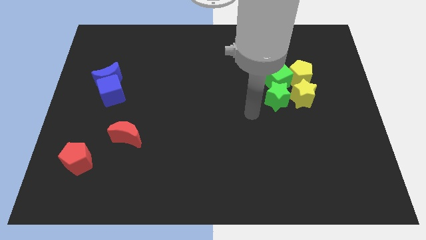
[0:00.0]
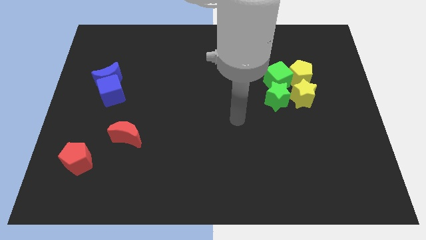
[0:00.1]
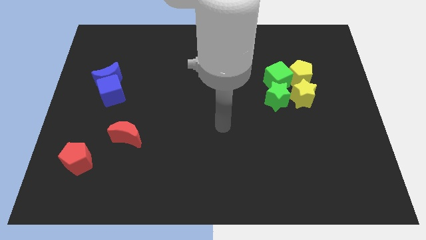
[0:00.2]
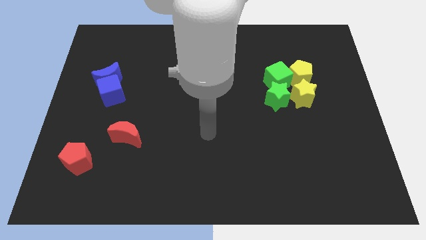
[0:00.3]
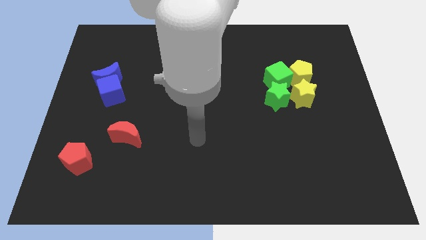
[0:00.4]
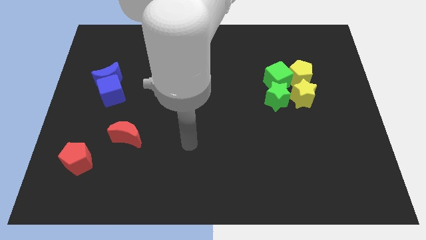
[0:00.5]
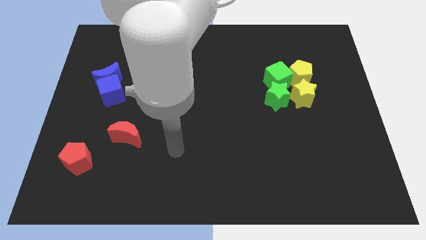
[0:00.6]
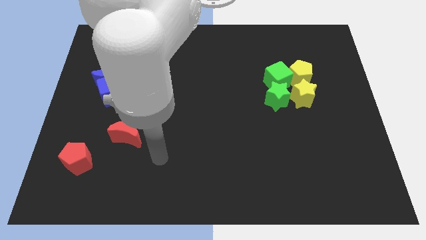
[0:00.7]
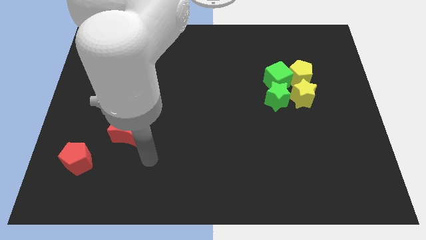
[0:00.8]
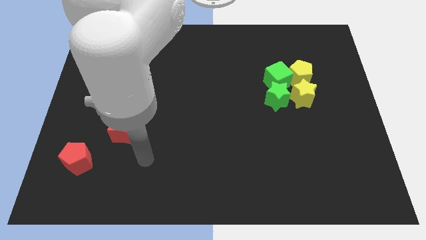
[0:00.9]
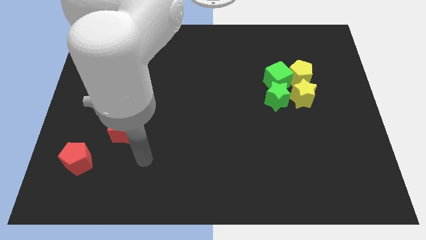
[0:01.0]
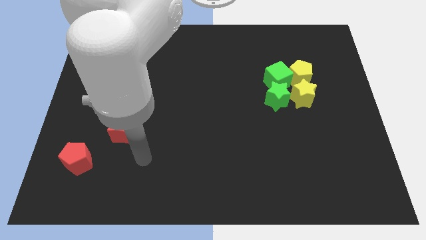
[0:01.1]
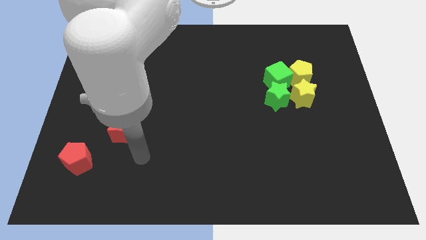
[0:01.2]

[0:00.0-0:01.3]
place your hand at the bottom right corner of the red moon

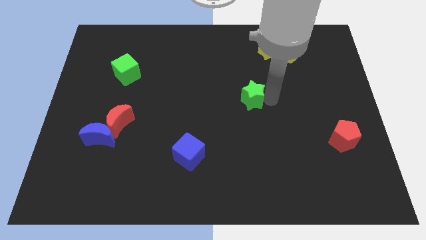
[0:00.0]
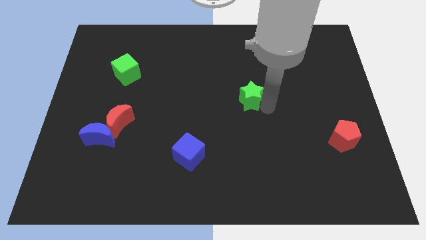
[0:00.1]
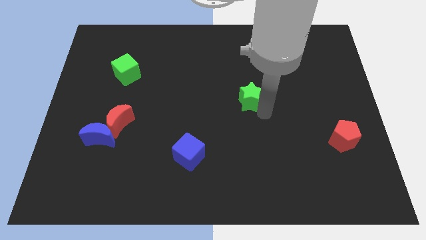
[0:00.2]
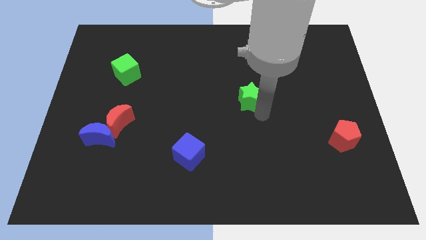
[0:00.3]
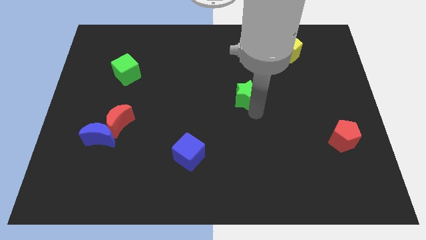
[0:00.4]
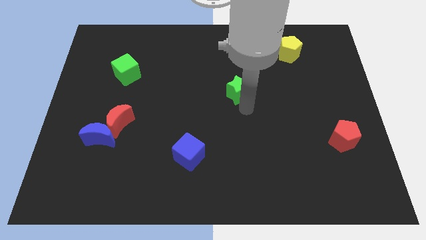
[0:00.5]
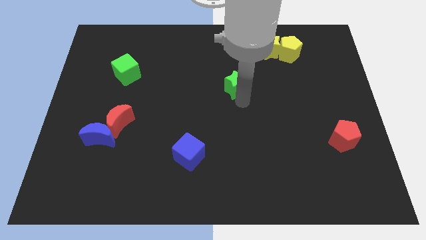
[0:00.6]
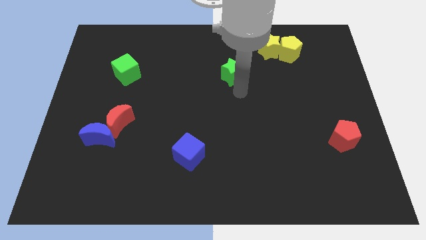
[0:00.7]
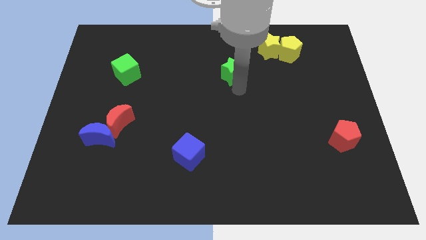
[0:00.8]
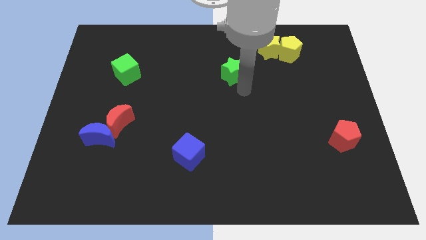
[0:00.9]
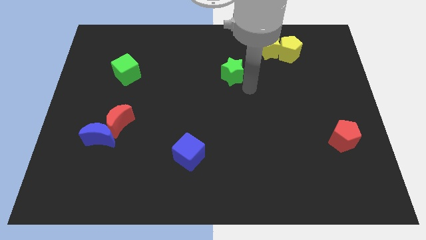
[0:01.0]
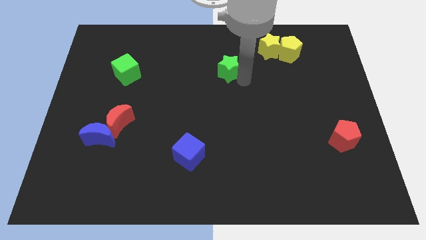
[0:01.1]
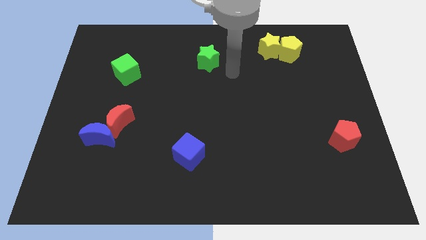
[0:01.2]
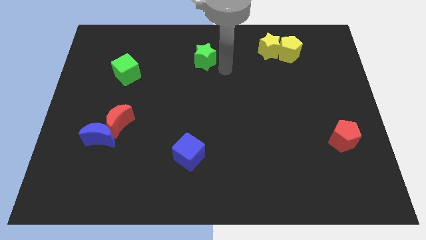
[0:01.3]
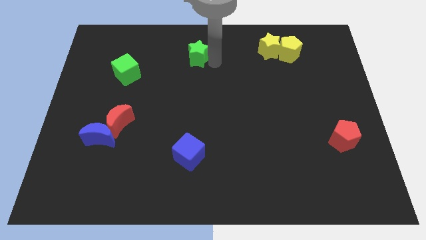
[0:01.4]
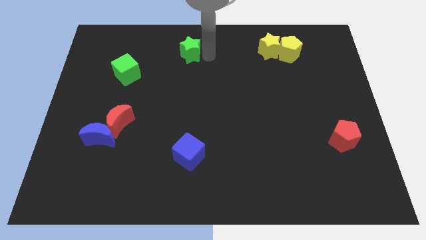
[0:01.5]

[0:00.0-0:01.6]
move the green star towards the top center of the board

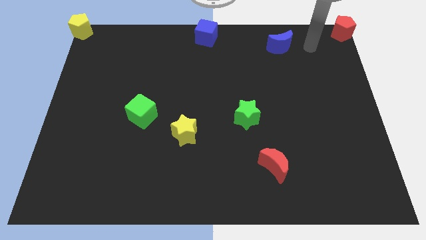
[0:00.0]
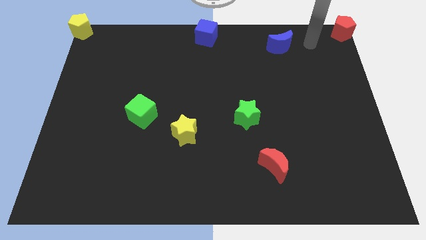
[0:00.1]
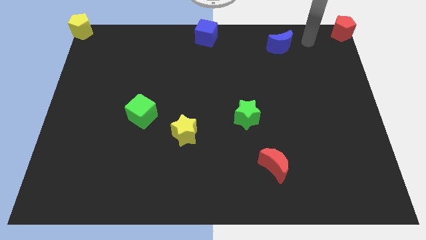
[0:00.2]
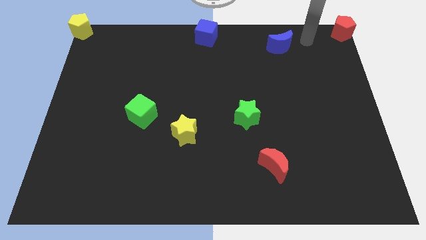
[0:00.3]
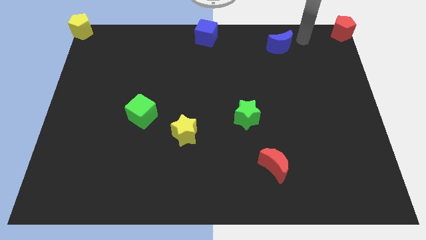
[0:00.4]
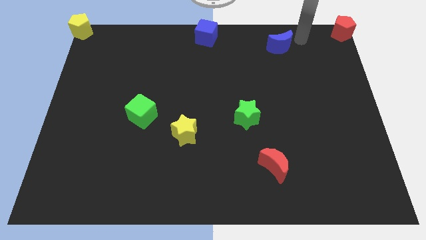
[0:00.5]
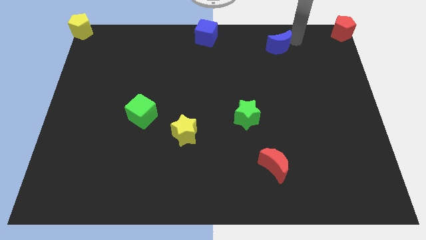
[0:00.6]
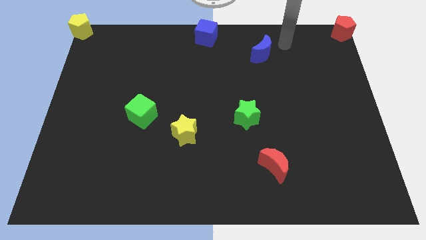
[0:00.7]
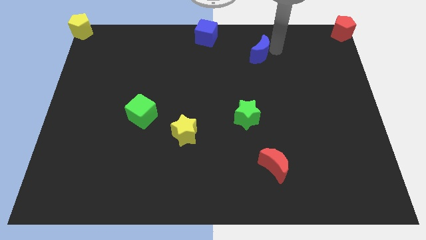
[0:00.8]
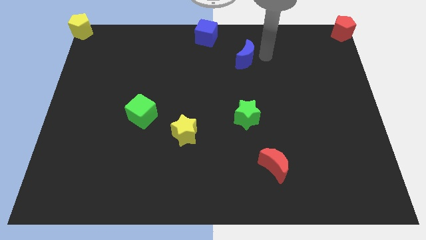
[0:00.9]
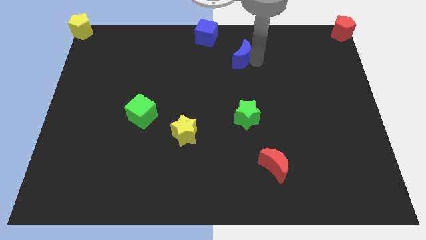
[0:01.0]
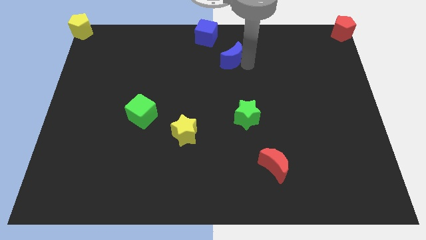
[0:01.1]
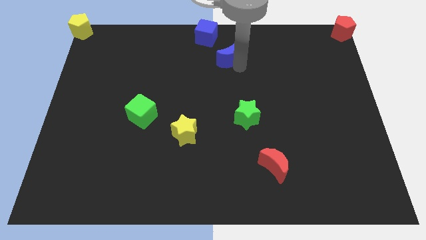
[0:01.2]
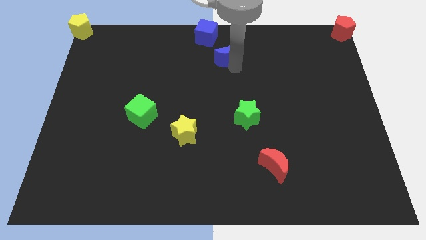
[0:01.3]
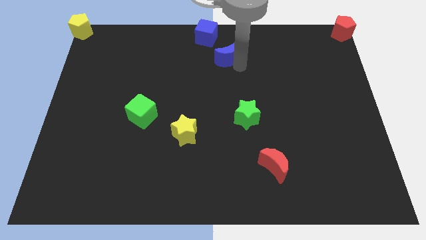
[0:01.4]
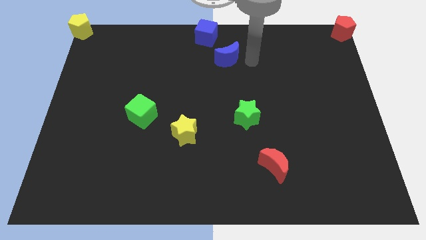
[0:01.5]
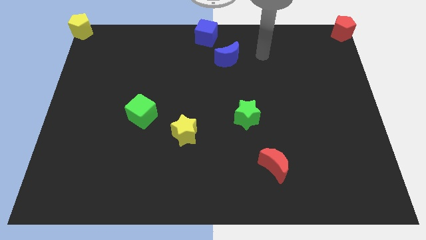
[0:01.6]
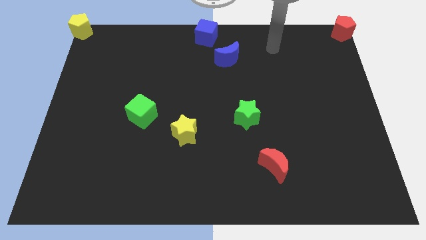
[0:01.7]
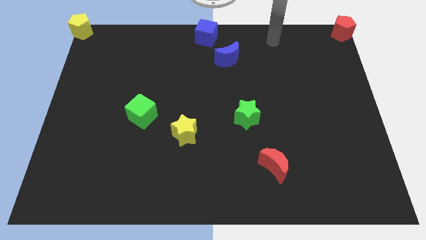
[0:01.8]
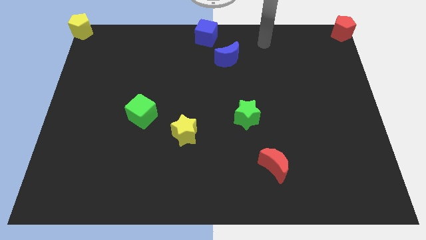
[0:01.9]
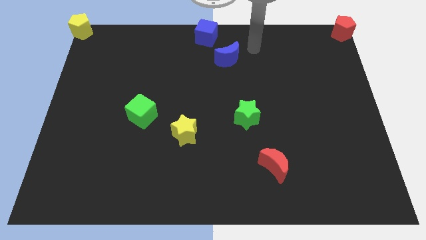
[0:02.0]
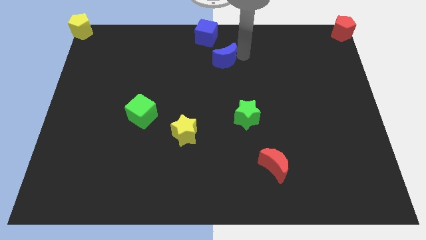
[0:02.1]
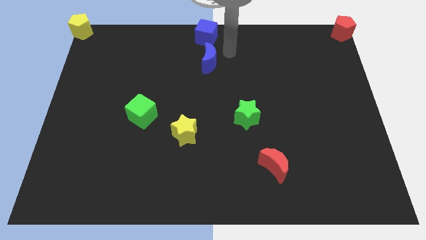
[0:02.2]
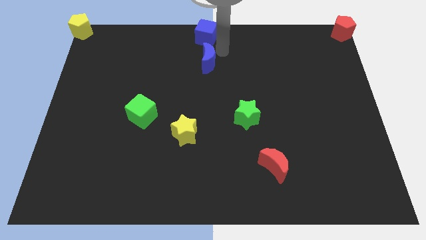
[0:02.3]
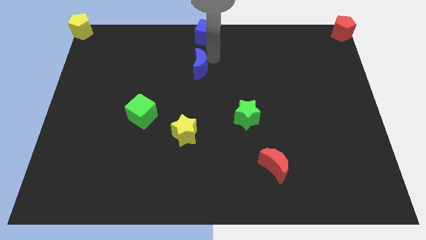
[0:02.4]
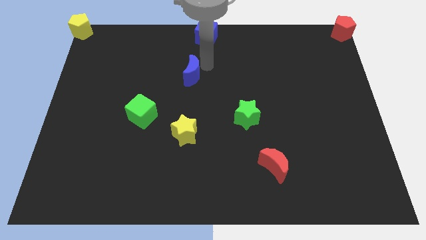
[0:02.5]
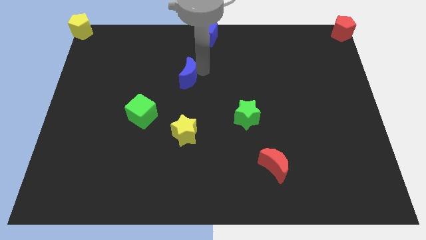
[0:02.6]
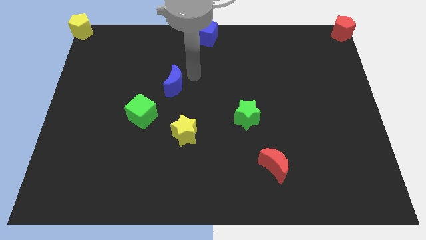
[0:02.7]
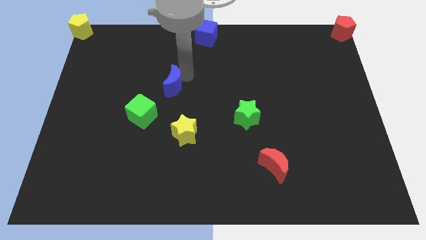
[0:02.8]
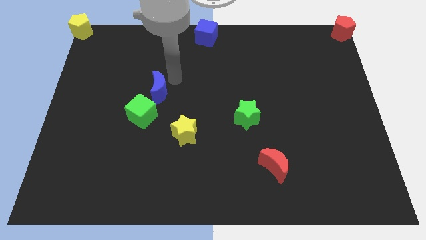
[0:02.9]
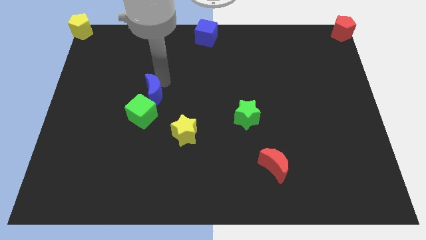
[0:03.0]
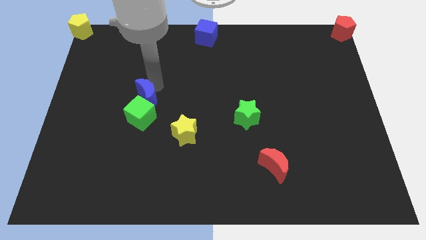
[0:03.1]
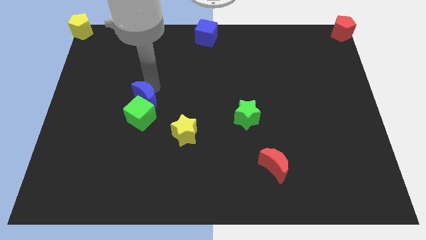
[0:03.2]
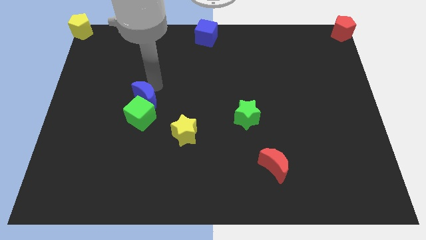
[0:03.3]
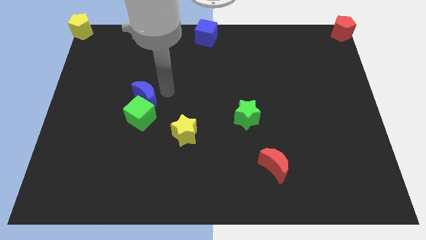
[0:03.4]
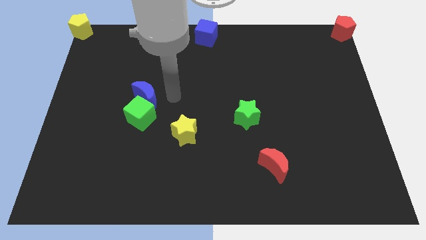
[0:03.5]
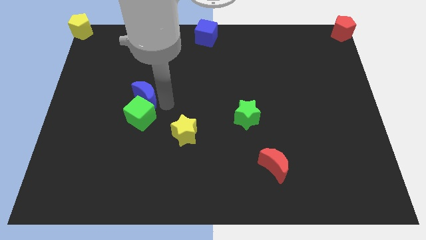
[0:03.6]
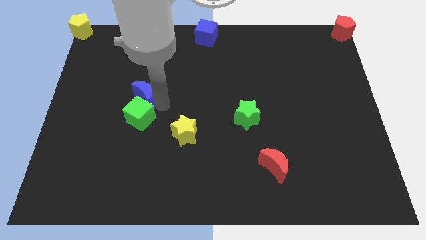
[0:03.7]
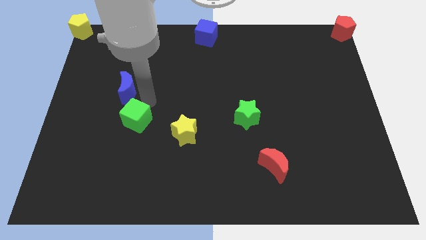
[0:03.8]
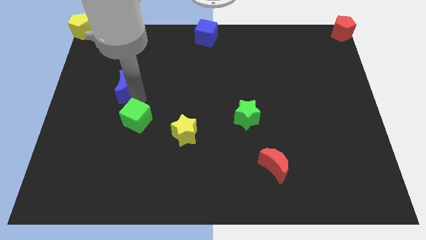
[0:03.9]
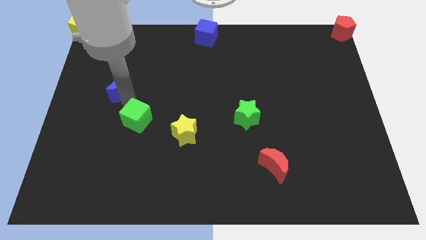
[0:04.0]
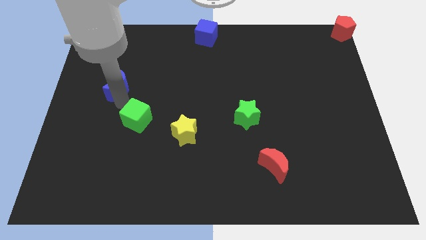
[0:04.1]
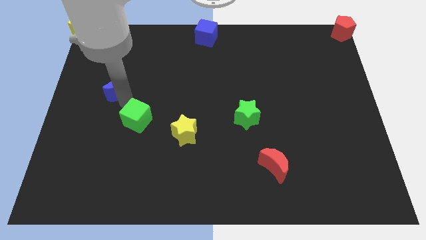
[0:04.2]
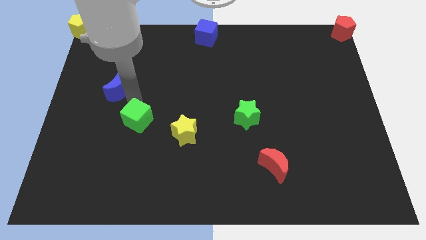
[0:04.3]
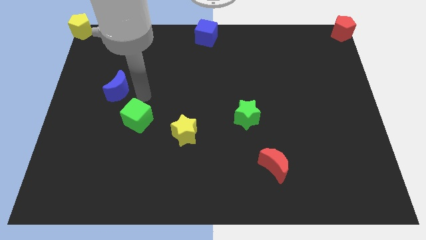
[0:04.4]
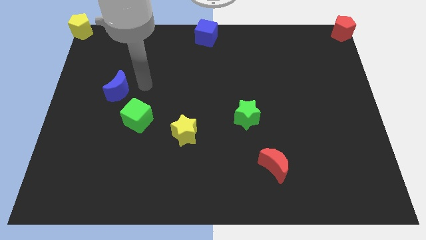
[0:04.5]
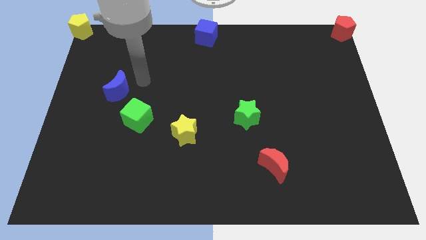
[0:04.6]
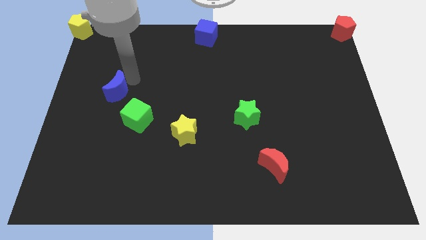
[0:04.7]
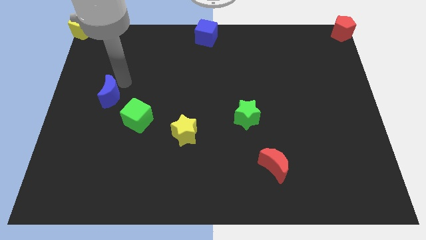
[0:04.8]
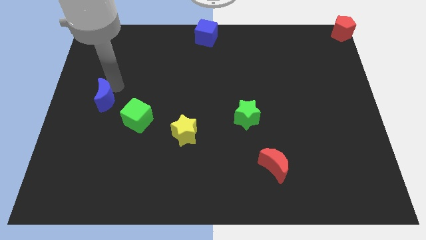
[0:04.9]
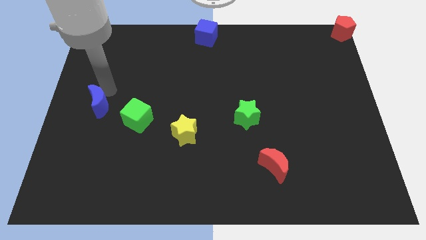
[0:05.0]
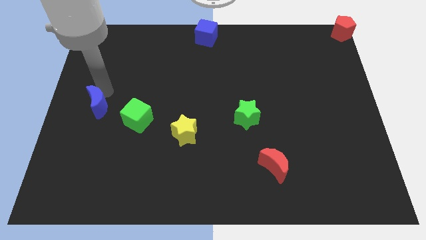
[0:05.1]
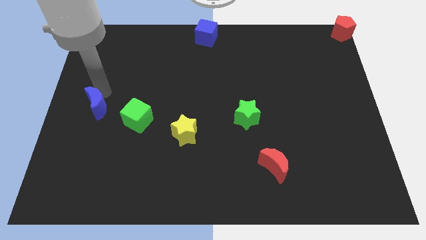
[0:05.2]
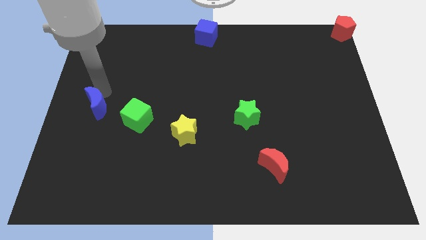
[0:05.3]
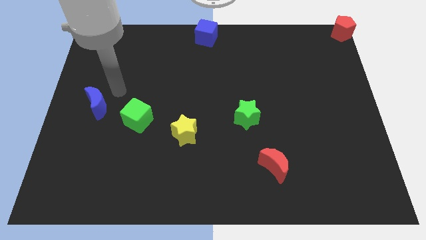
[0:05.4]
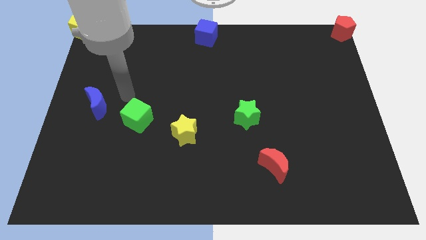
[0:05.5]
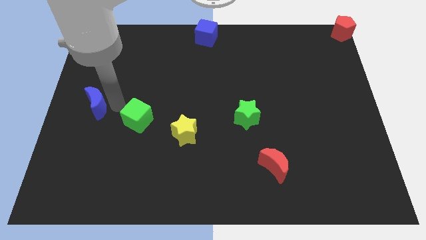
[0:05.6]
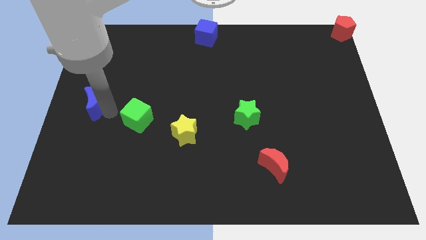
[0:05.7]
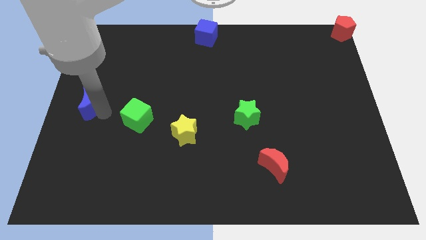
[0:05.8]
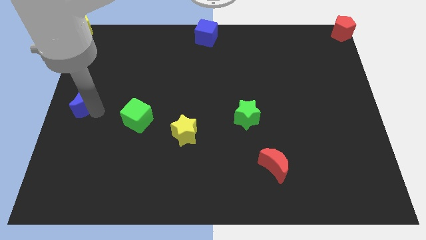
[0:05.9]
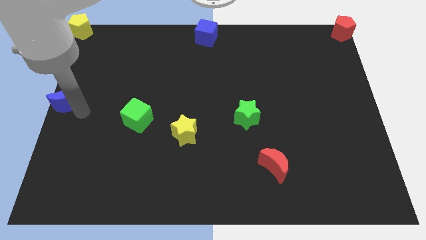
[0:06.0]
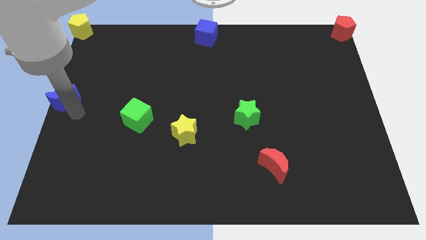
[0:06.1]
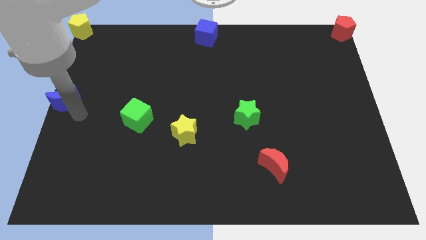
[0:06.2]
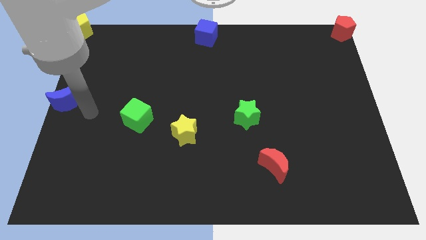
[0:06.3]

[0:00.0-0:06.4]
place the blue moon to the center left side of the board
